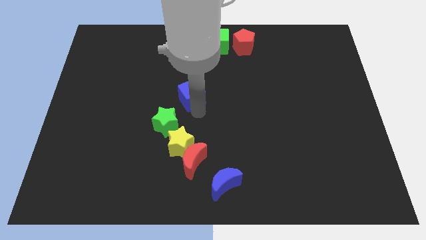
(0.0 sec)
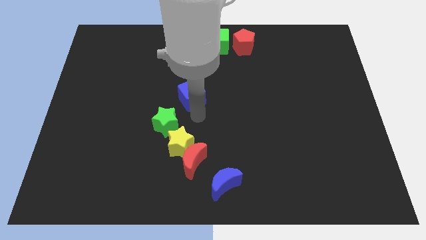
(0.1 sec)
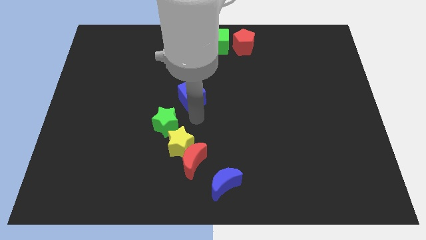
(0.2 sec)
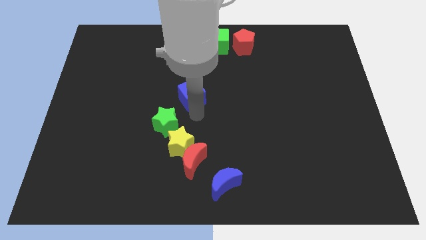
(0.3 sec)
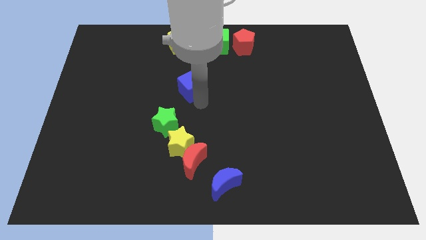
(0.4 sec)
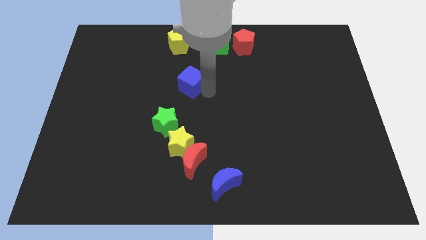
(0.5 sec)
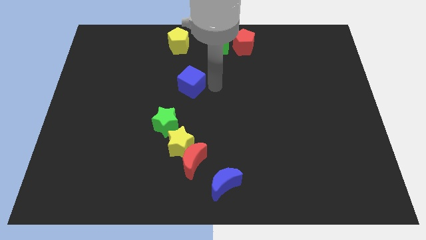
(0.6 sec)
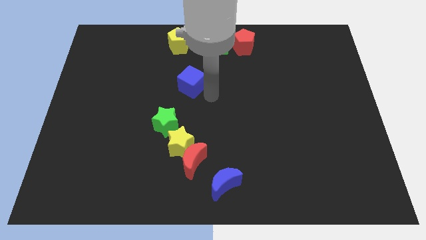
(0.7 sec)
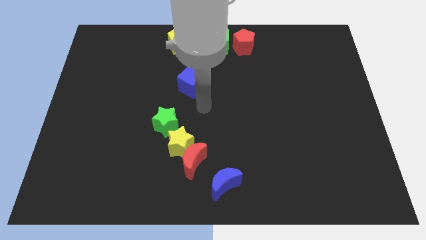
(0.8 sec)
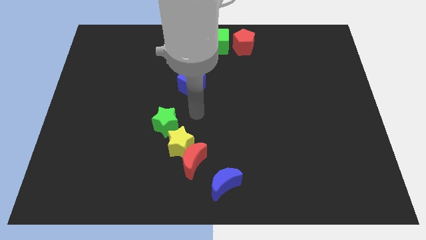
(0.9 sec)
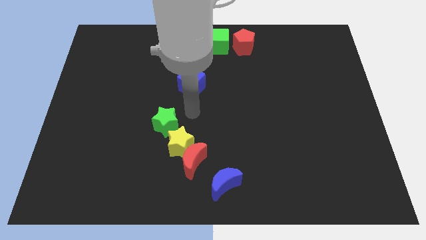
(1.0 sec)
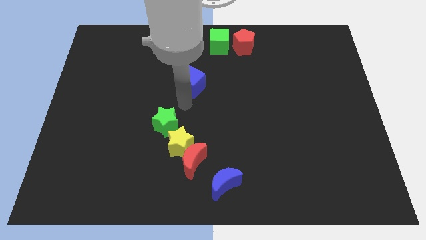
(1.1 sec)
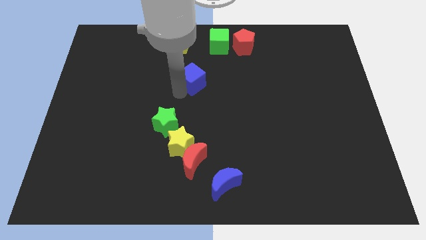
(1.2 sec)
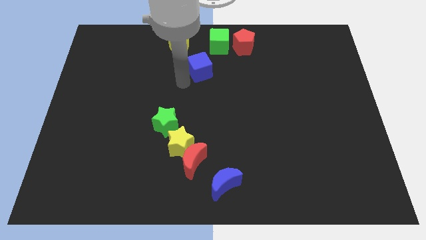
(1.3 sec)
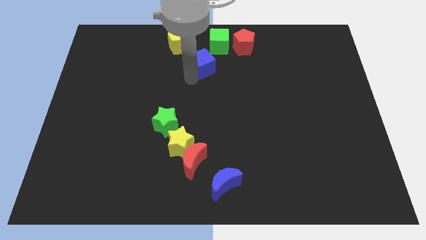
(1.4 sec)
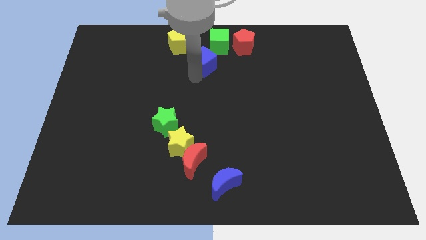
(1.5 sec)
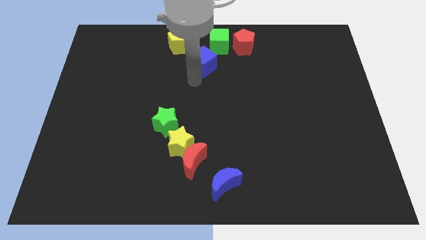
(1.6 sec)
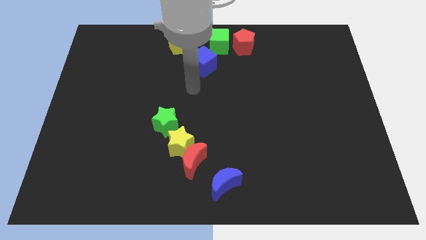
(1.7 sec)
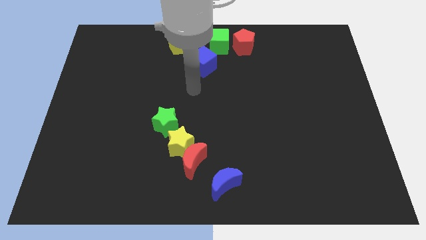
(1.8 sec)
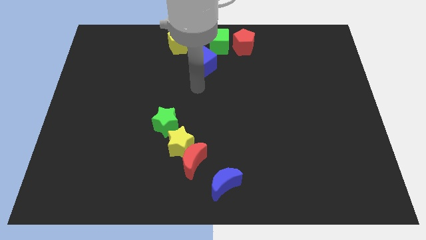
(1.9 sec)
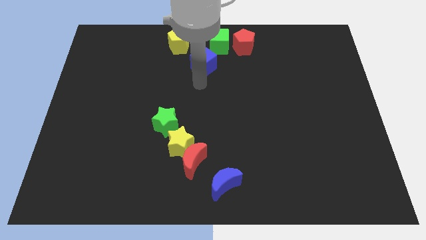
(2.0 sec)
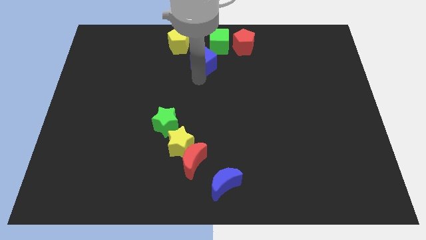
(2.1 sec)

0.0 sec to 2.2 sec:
move the blue cube towards bottom of green cube

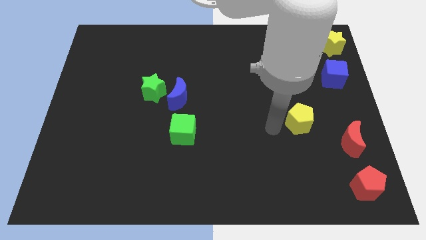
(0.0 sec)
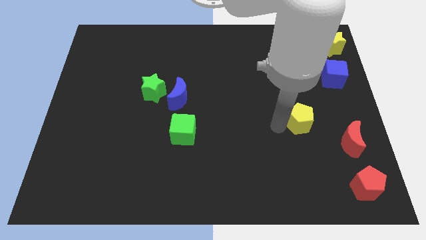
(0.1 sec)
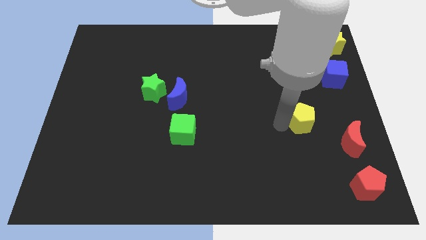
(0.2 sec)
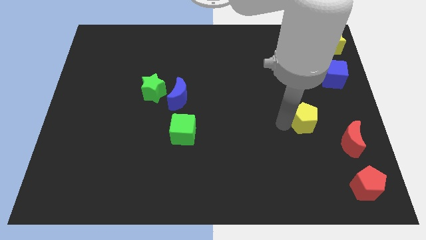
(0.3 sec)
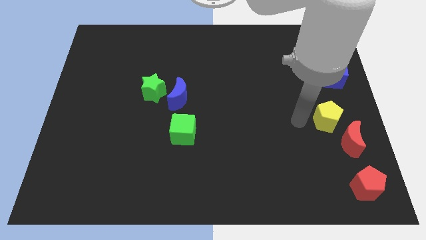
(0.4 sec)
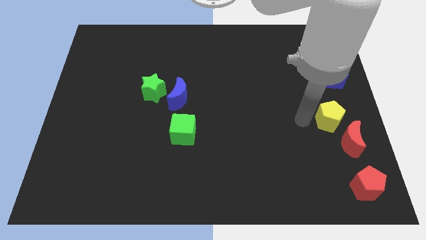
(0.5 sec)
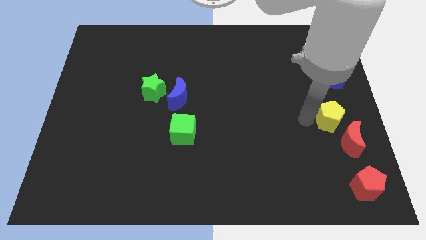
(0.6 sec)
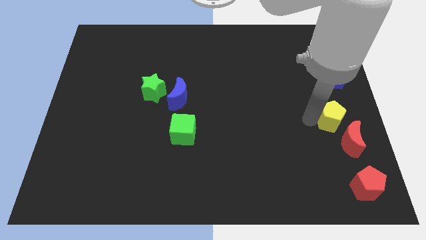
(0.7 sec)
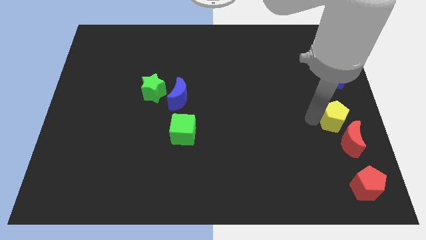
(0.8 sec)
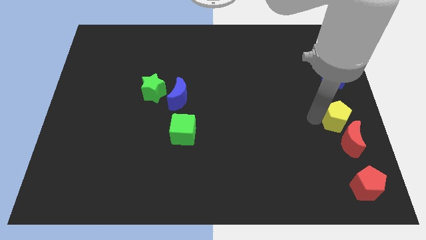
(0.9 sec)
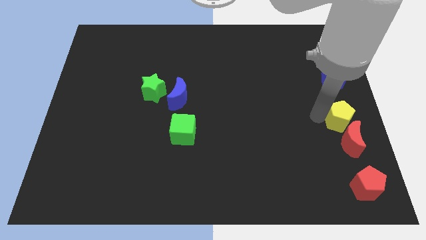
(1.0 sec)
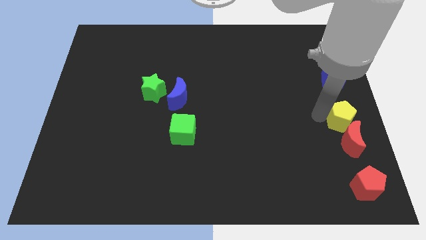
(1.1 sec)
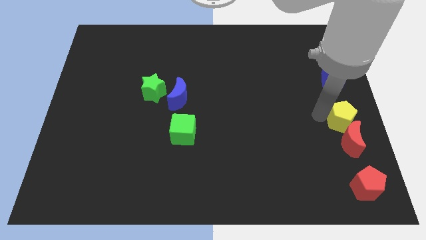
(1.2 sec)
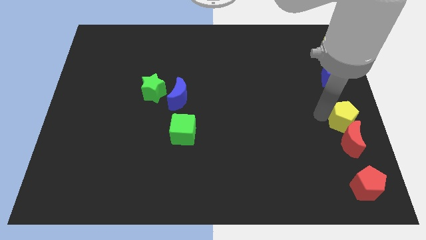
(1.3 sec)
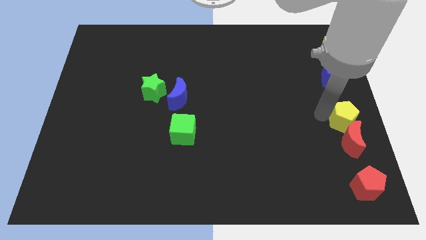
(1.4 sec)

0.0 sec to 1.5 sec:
place yellow pentagon above the red moon

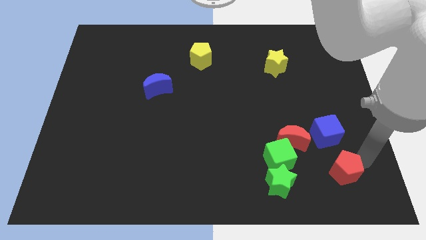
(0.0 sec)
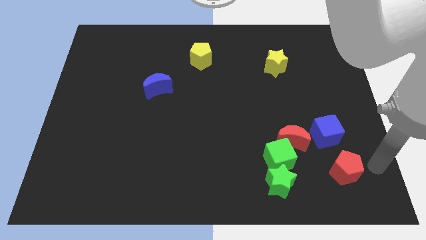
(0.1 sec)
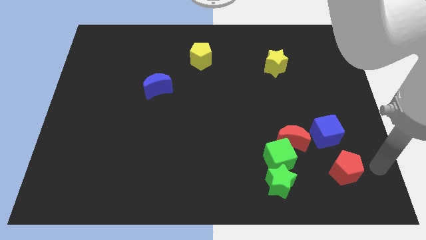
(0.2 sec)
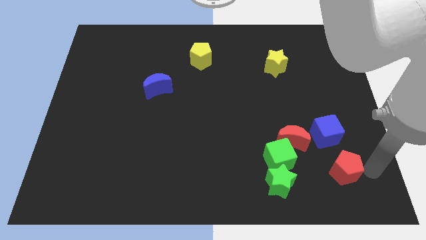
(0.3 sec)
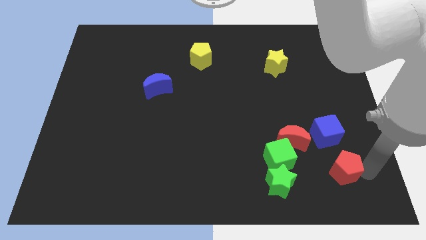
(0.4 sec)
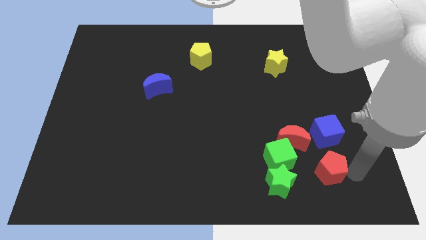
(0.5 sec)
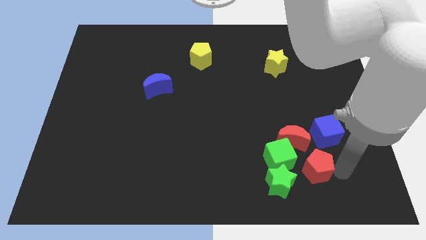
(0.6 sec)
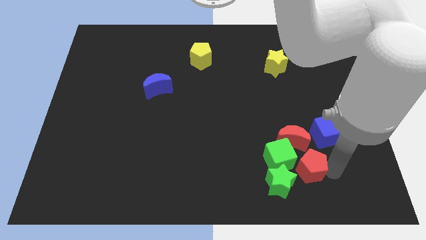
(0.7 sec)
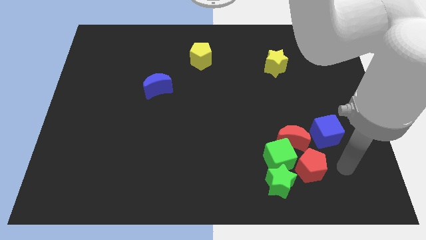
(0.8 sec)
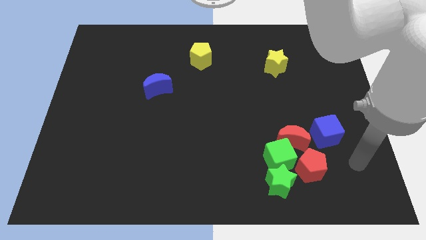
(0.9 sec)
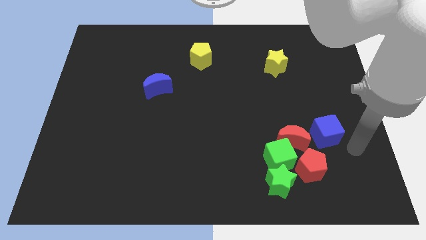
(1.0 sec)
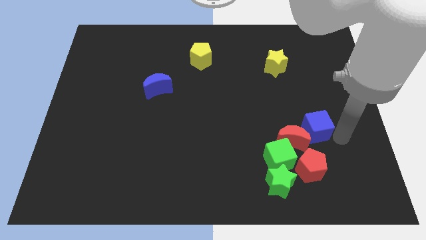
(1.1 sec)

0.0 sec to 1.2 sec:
add red pentagon to the green blocks and red moon

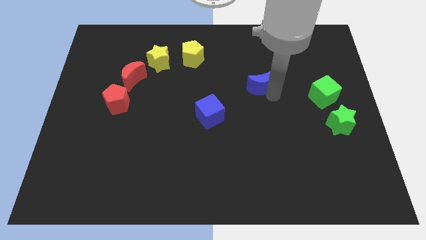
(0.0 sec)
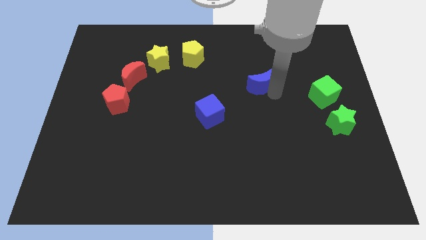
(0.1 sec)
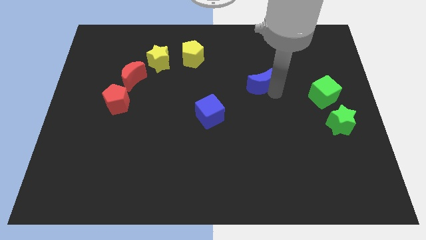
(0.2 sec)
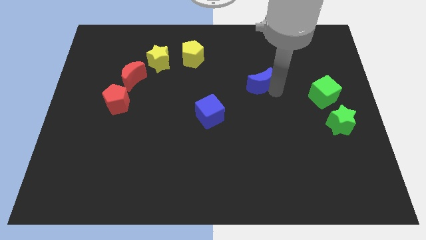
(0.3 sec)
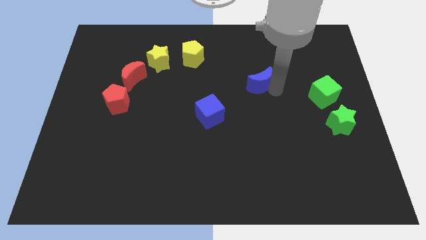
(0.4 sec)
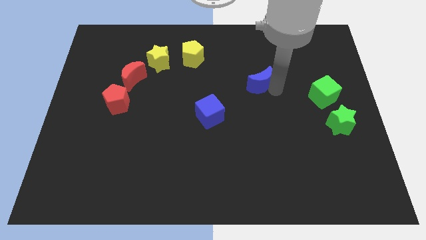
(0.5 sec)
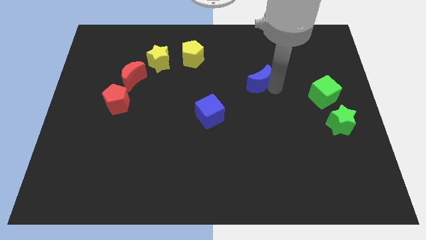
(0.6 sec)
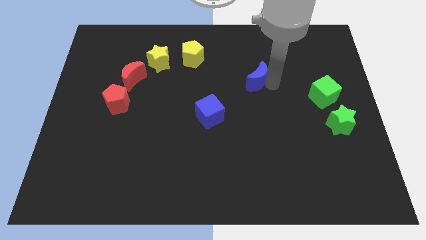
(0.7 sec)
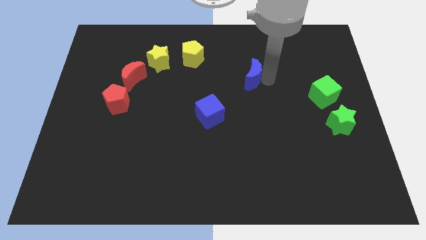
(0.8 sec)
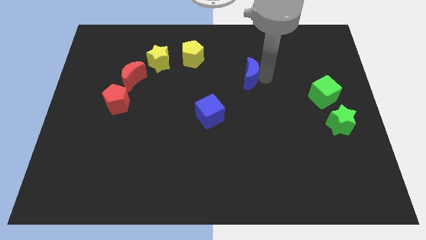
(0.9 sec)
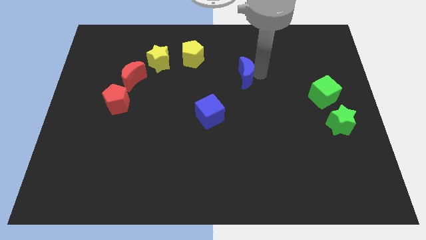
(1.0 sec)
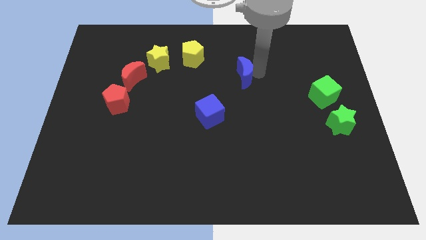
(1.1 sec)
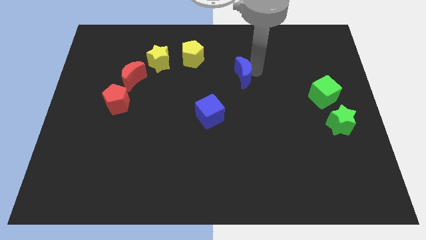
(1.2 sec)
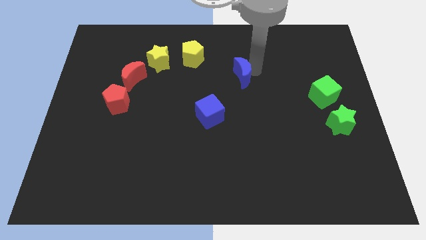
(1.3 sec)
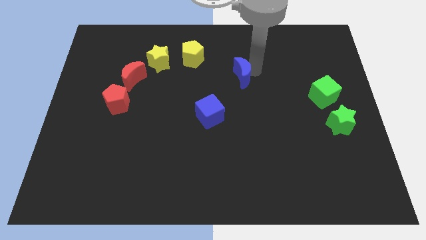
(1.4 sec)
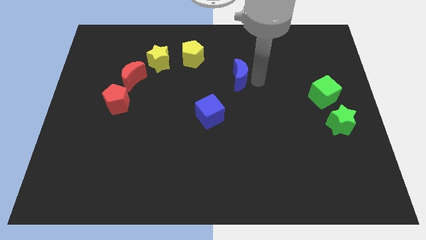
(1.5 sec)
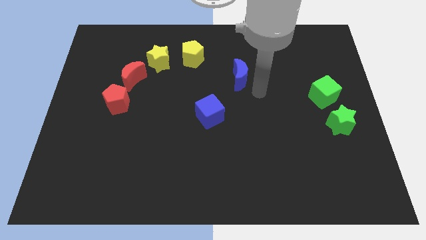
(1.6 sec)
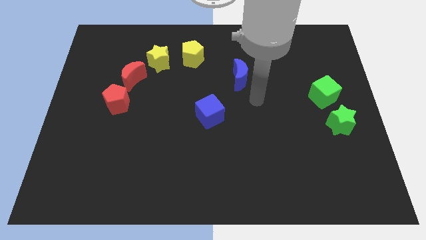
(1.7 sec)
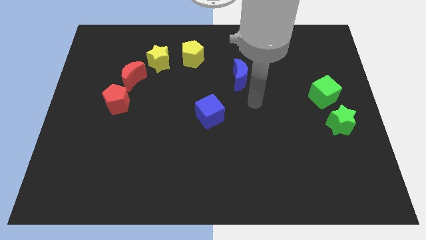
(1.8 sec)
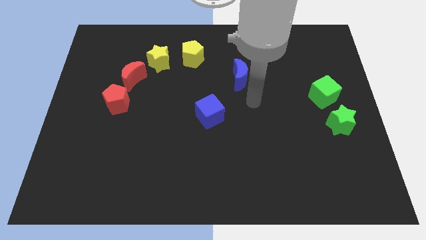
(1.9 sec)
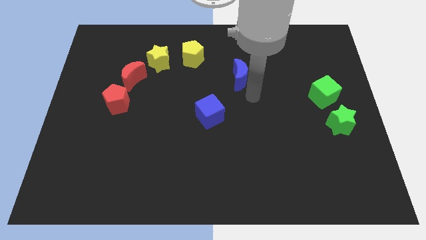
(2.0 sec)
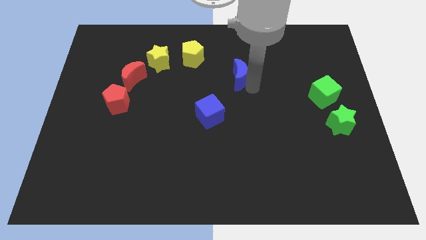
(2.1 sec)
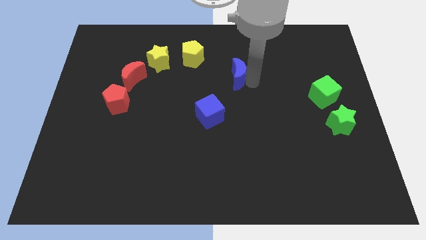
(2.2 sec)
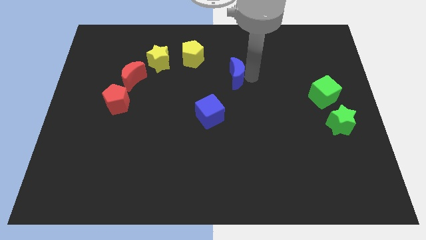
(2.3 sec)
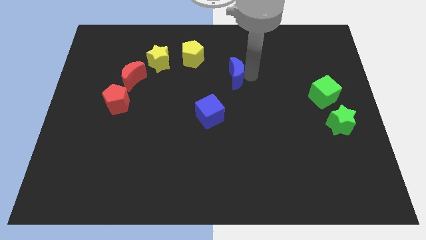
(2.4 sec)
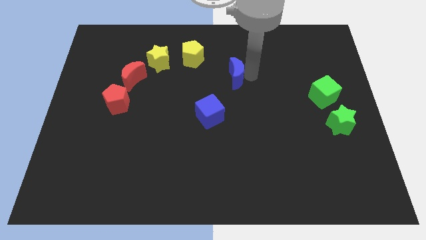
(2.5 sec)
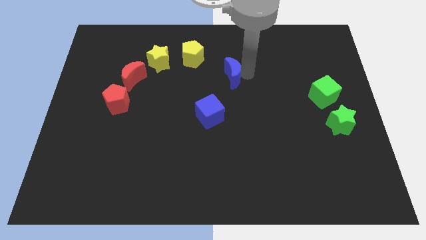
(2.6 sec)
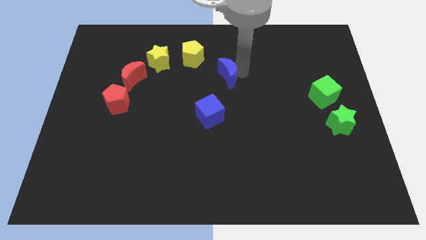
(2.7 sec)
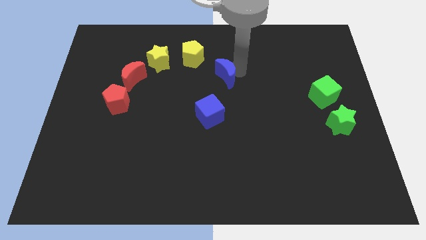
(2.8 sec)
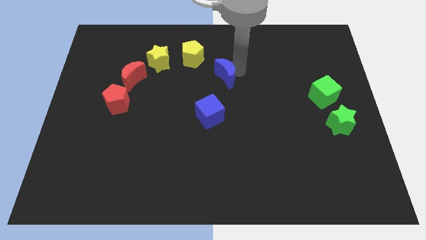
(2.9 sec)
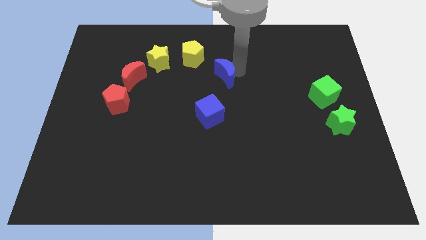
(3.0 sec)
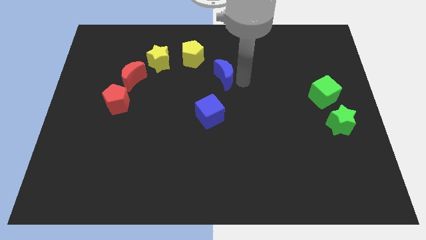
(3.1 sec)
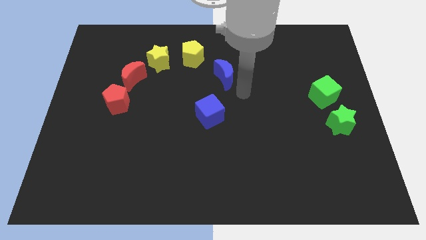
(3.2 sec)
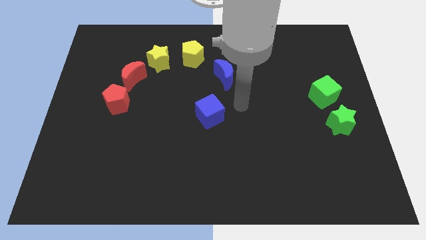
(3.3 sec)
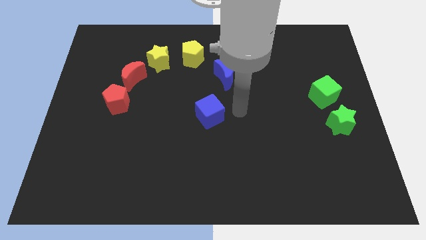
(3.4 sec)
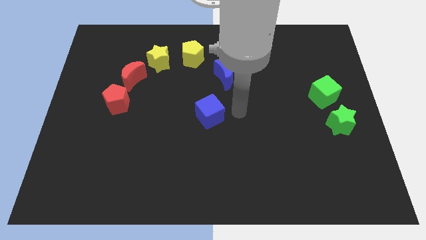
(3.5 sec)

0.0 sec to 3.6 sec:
move the blue moon diagonally top right to the blue cube

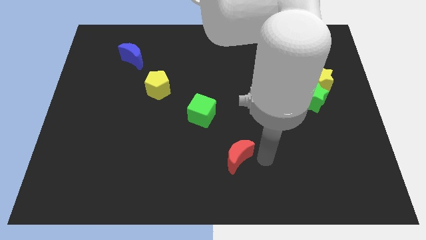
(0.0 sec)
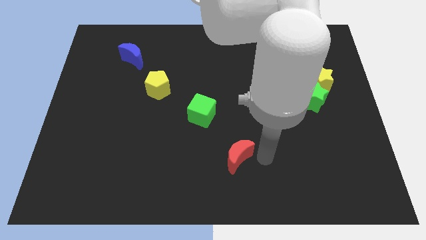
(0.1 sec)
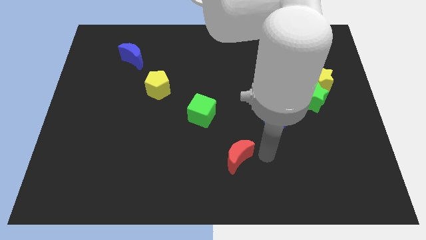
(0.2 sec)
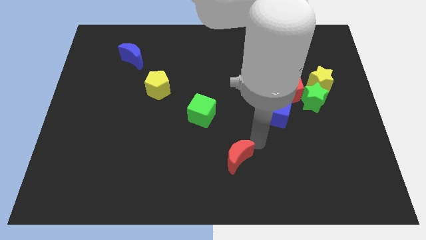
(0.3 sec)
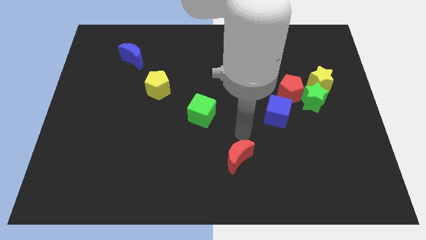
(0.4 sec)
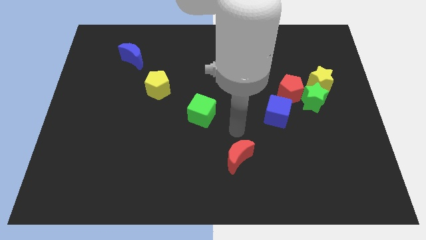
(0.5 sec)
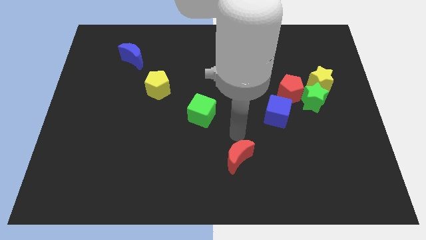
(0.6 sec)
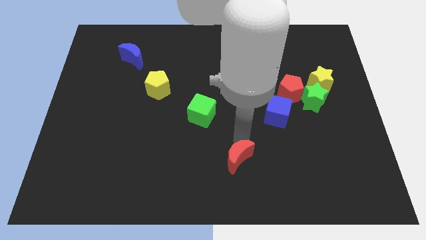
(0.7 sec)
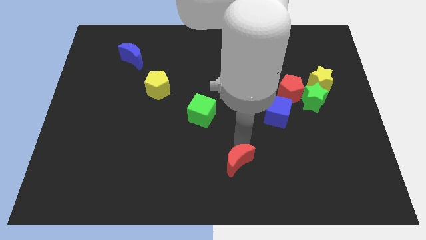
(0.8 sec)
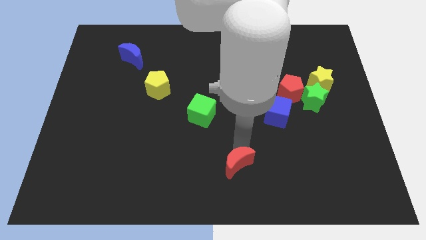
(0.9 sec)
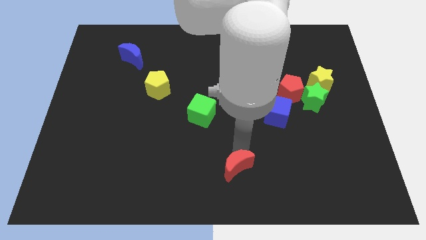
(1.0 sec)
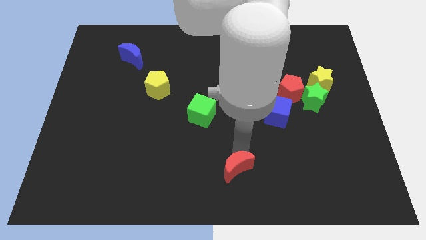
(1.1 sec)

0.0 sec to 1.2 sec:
move the red crescent to the bottom center of the board
